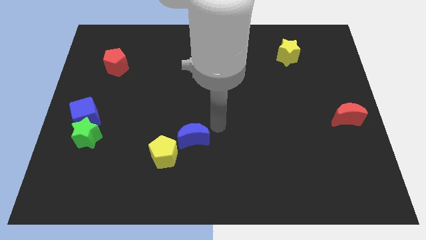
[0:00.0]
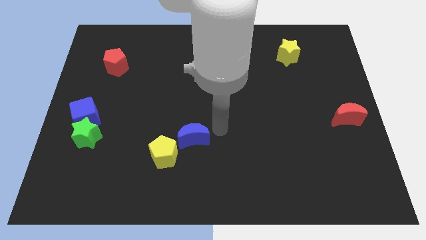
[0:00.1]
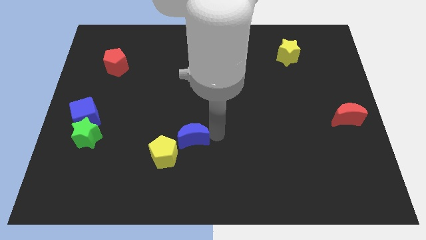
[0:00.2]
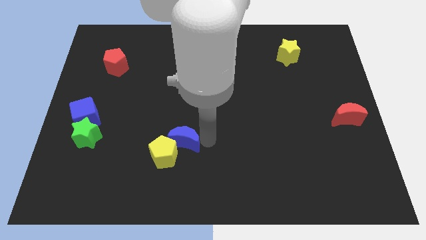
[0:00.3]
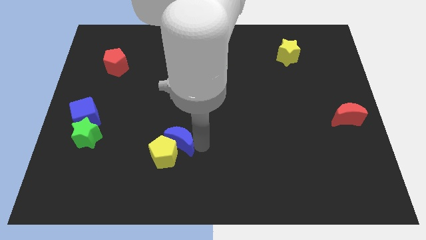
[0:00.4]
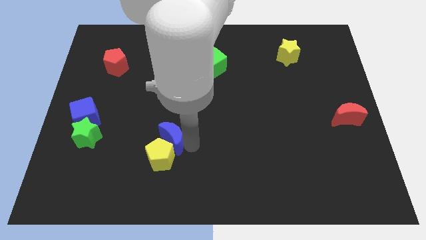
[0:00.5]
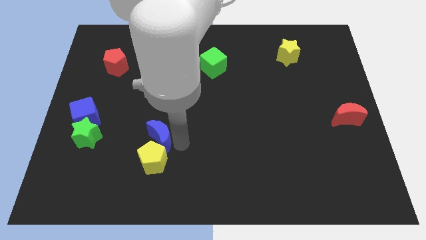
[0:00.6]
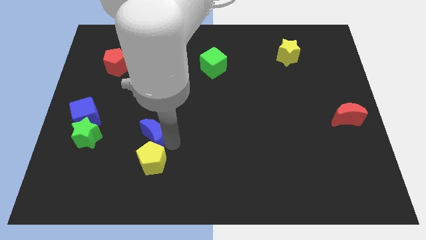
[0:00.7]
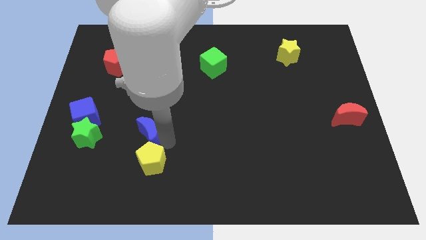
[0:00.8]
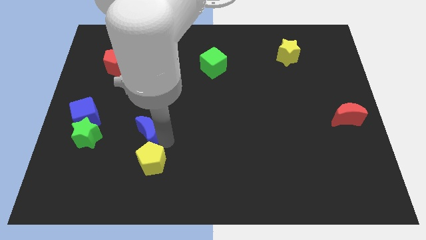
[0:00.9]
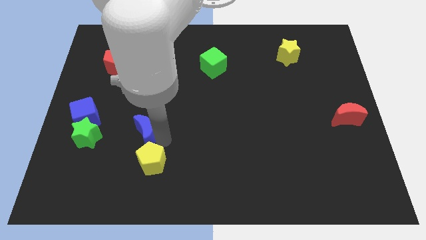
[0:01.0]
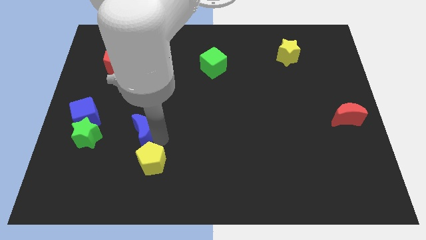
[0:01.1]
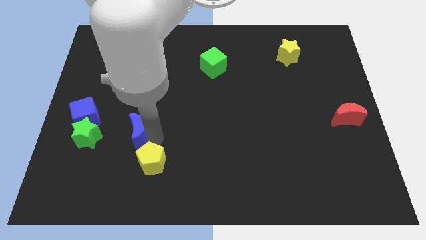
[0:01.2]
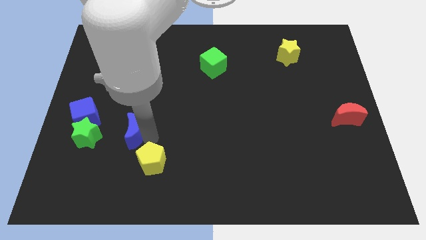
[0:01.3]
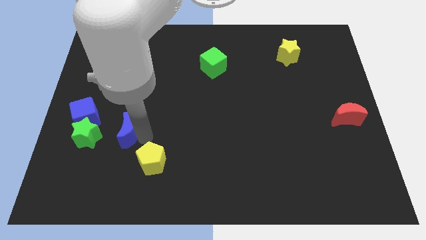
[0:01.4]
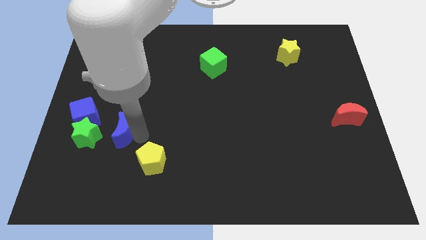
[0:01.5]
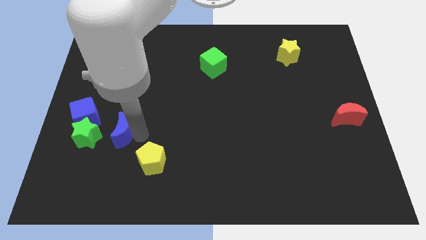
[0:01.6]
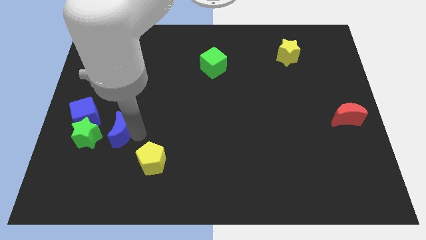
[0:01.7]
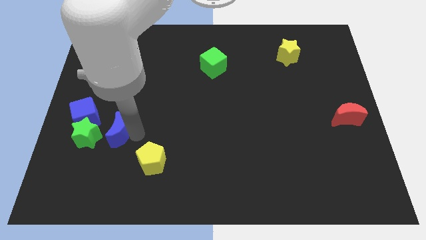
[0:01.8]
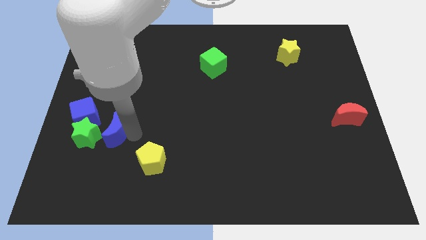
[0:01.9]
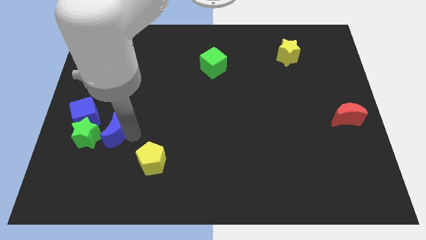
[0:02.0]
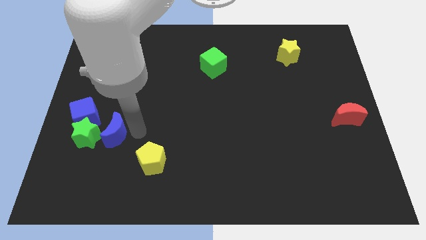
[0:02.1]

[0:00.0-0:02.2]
push the blue moon close to the green star

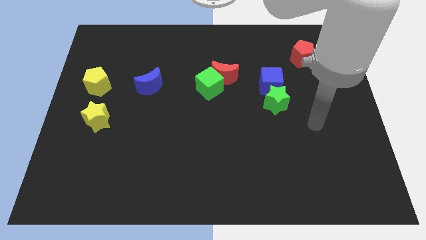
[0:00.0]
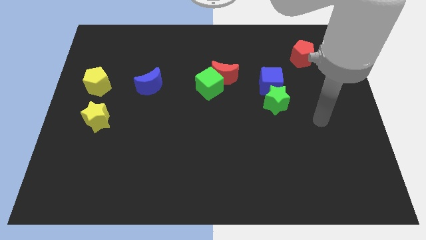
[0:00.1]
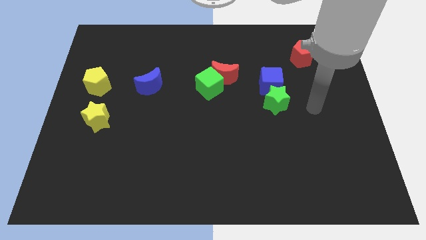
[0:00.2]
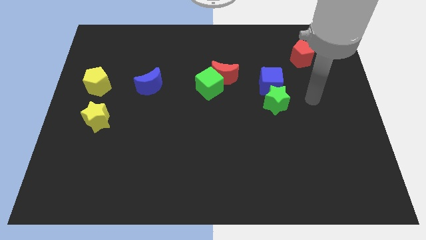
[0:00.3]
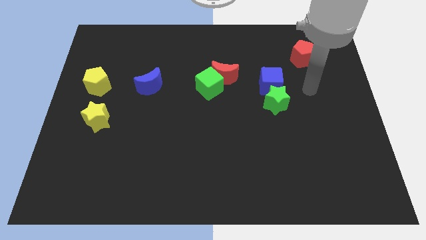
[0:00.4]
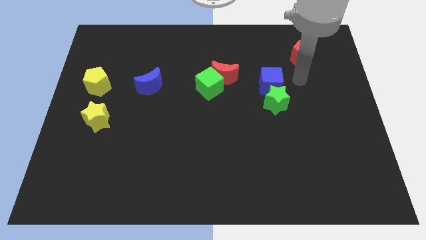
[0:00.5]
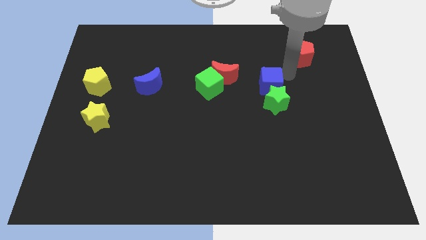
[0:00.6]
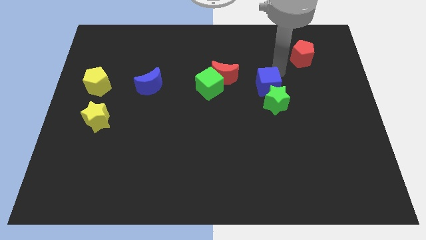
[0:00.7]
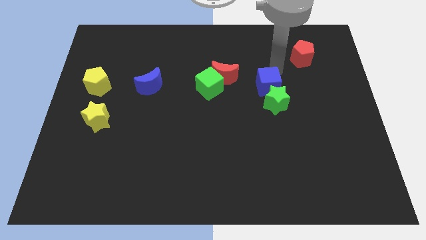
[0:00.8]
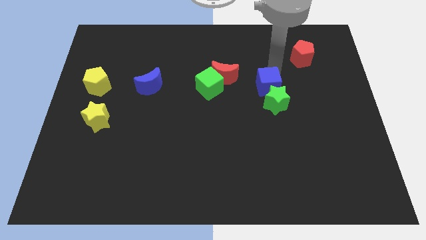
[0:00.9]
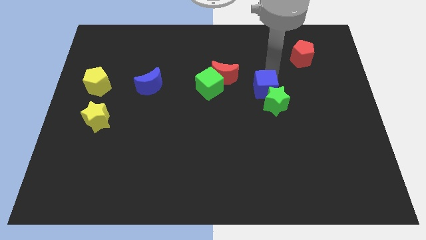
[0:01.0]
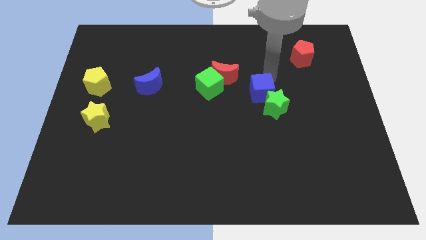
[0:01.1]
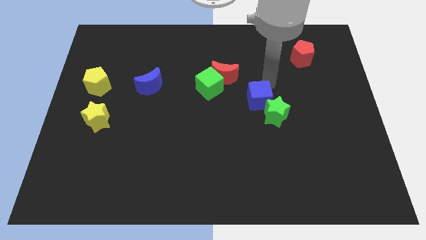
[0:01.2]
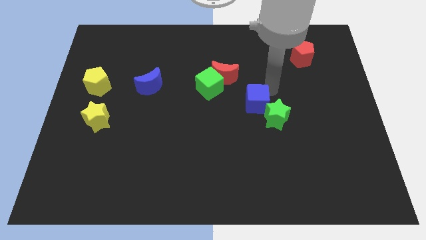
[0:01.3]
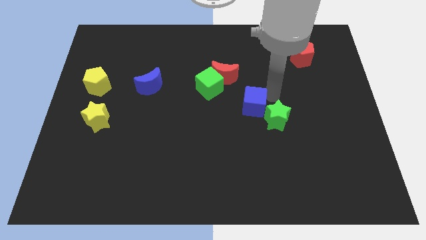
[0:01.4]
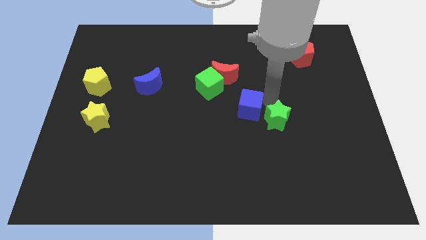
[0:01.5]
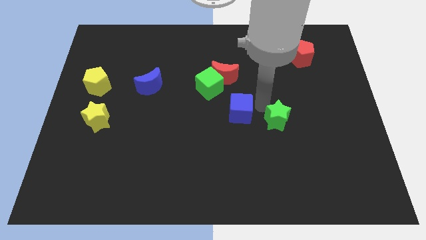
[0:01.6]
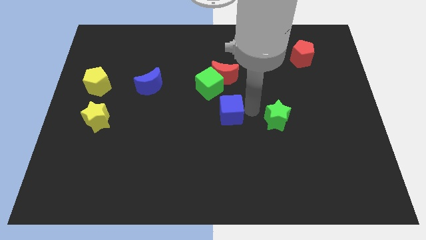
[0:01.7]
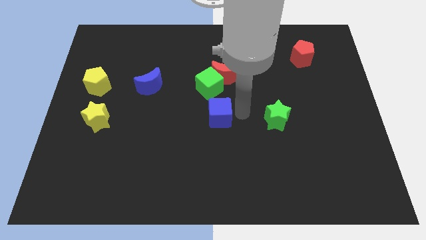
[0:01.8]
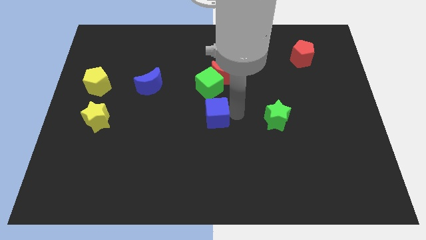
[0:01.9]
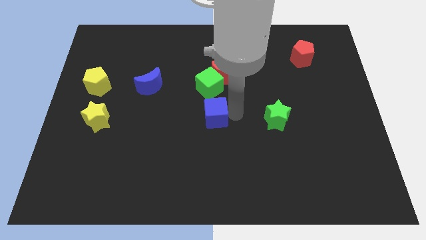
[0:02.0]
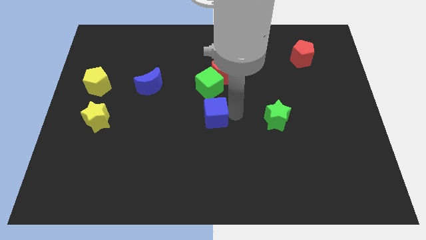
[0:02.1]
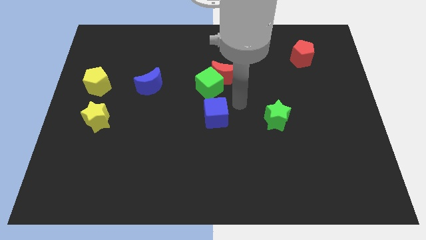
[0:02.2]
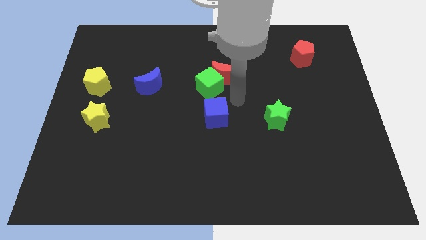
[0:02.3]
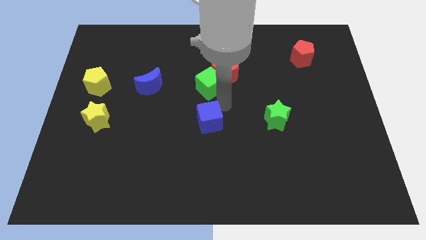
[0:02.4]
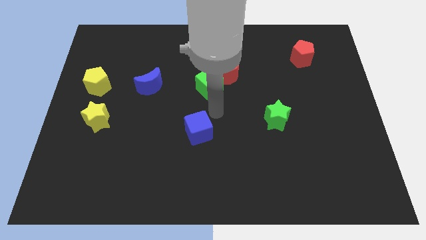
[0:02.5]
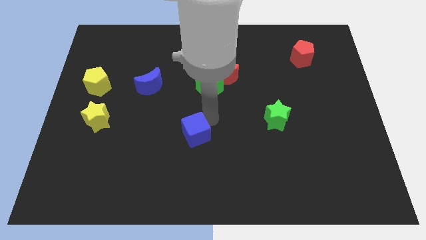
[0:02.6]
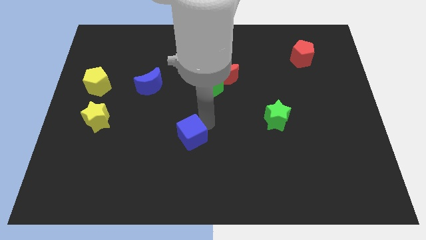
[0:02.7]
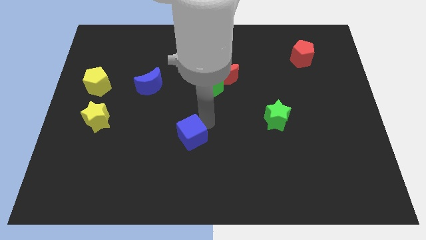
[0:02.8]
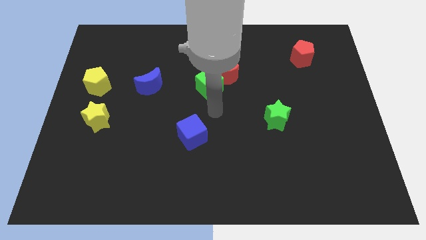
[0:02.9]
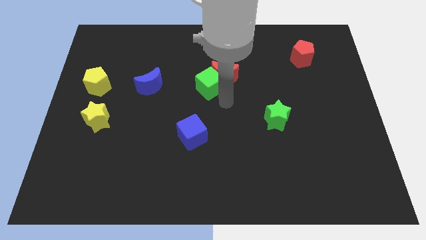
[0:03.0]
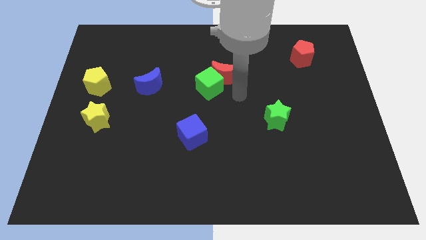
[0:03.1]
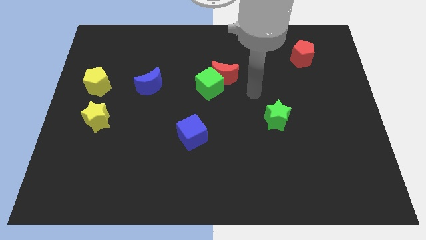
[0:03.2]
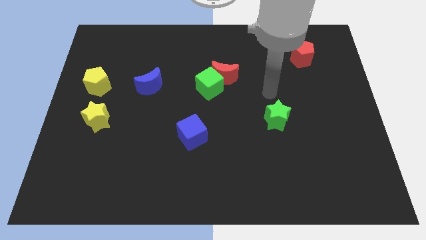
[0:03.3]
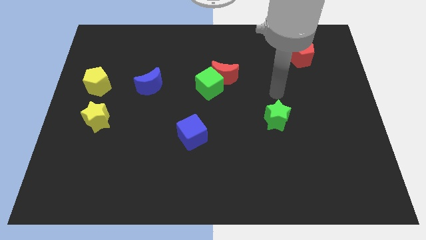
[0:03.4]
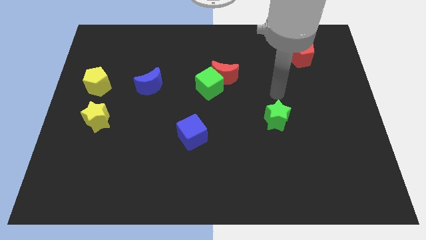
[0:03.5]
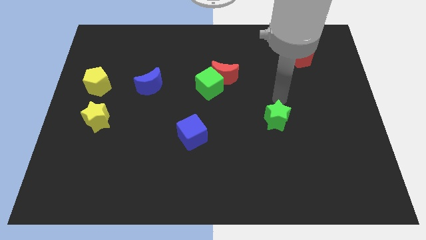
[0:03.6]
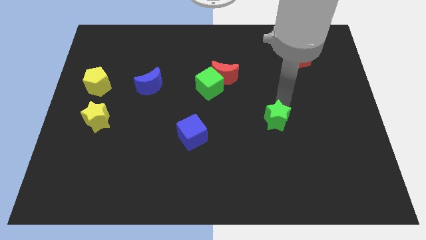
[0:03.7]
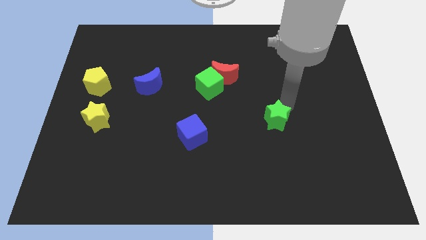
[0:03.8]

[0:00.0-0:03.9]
push the blue cube down to the green cube

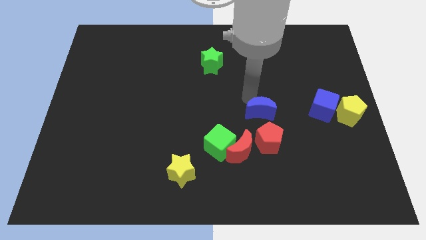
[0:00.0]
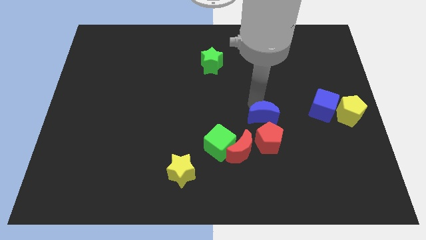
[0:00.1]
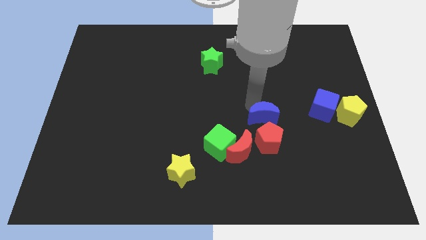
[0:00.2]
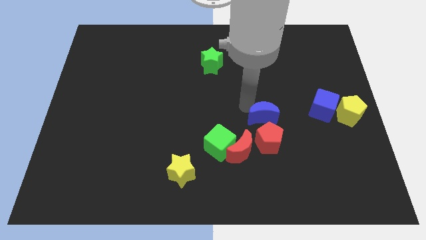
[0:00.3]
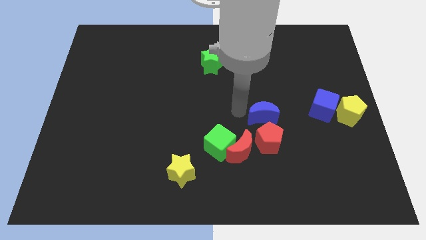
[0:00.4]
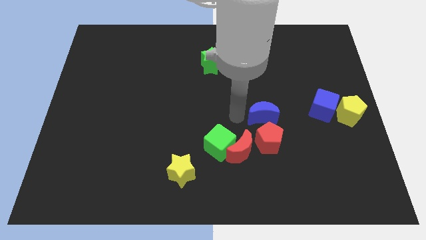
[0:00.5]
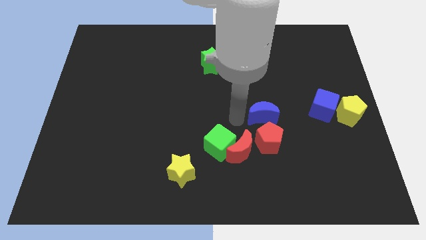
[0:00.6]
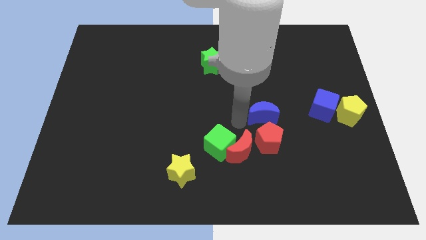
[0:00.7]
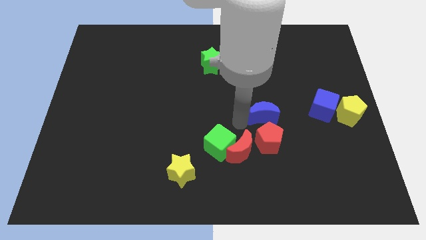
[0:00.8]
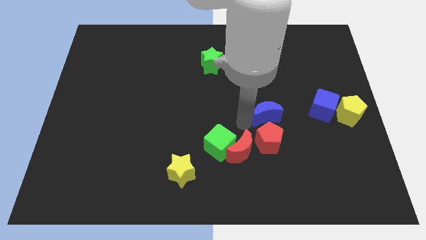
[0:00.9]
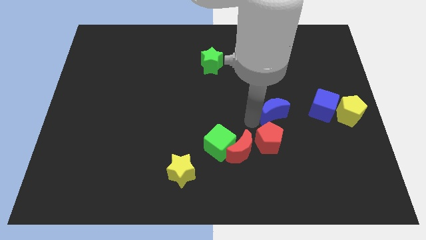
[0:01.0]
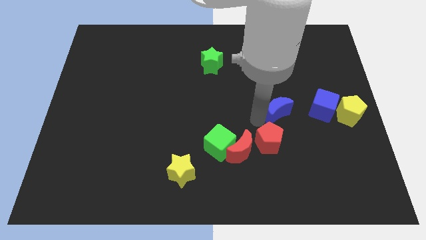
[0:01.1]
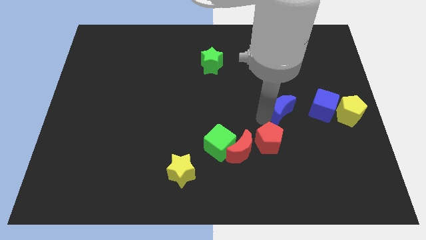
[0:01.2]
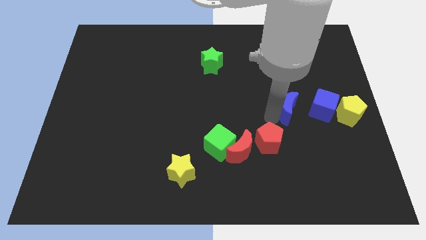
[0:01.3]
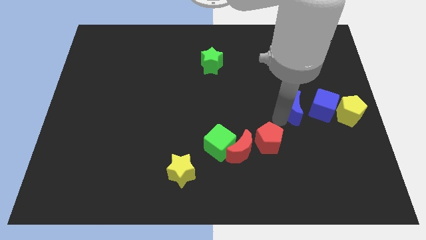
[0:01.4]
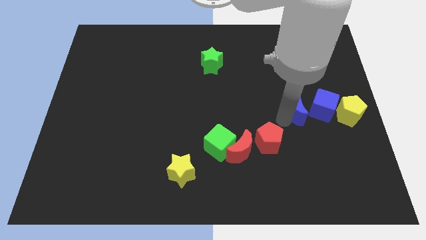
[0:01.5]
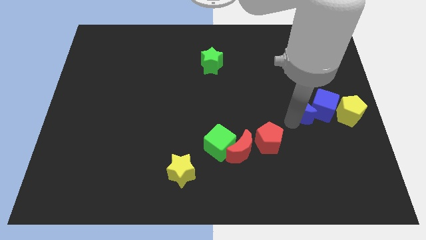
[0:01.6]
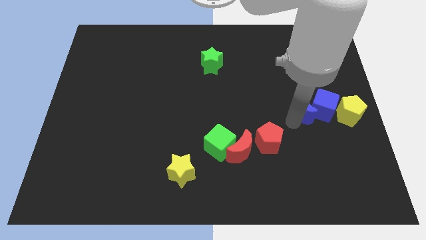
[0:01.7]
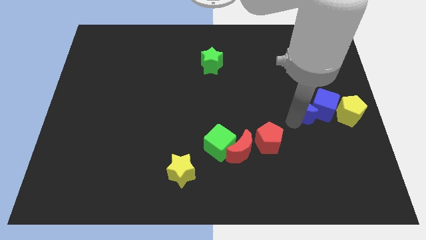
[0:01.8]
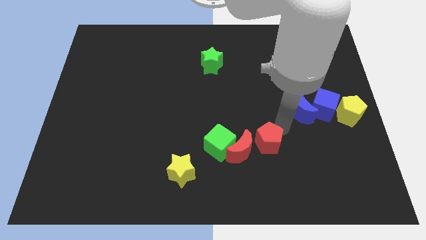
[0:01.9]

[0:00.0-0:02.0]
push the blue moon into the blue cube

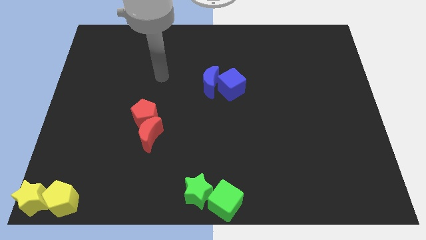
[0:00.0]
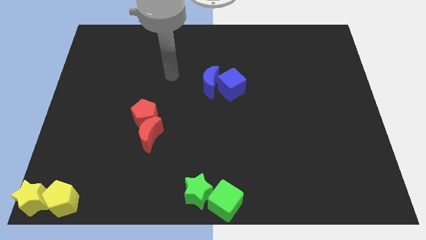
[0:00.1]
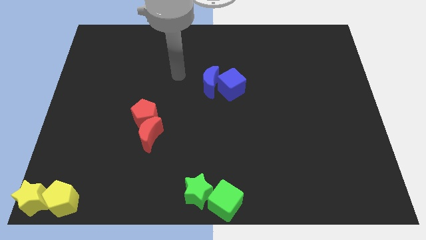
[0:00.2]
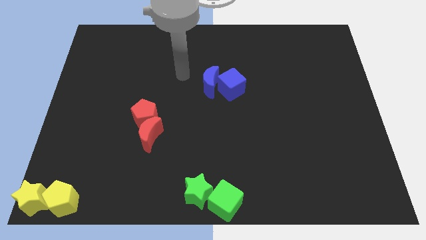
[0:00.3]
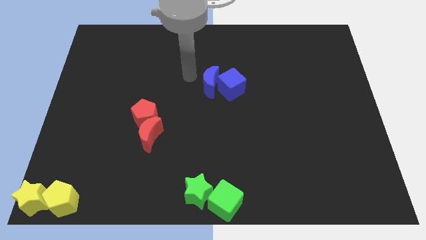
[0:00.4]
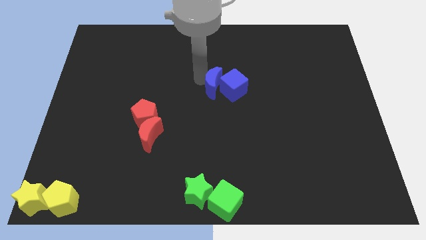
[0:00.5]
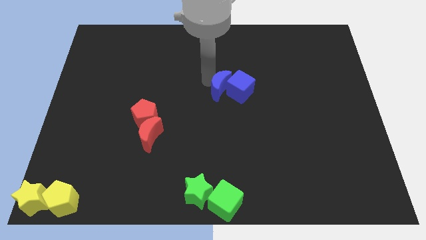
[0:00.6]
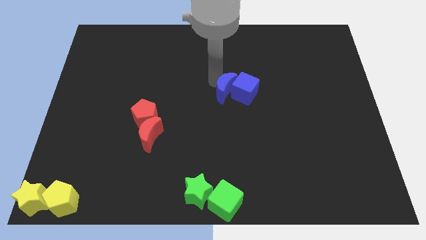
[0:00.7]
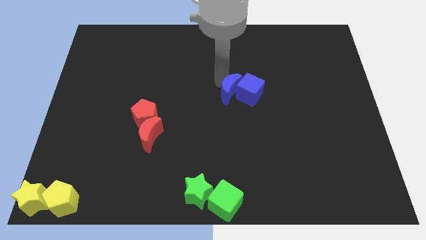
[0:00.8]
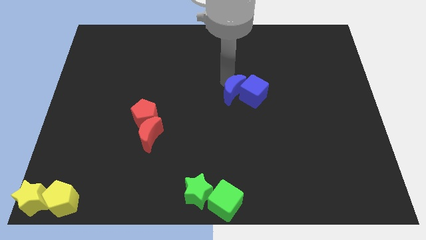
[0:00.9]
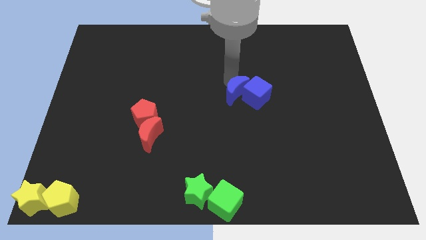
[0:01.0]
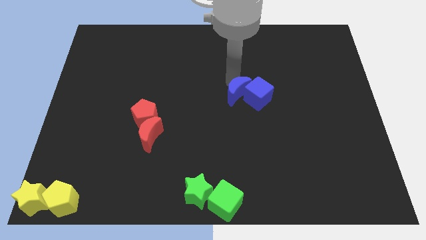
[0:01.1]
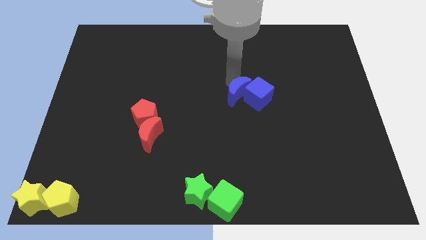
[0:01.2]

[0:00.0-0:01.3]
slightly push blue cube with the blue crescent towards the right center of the board
